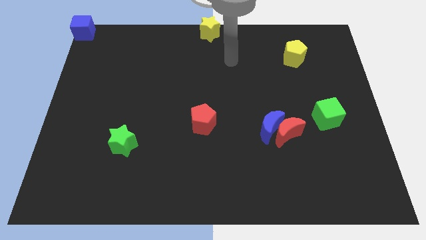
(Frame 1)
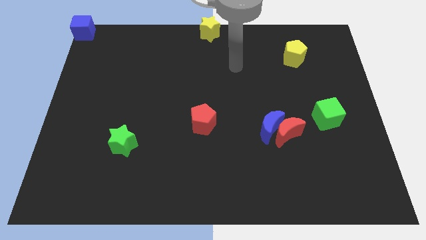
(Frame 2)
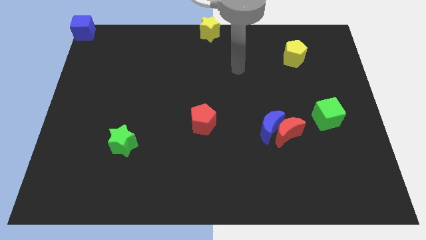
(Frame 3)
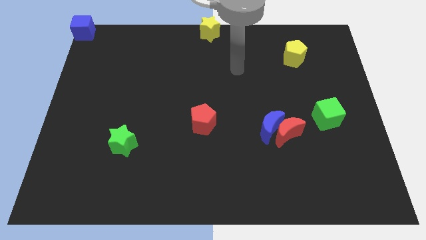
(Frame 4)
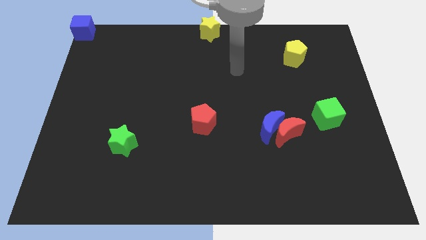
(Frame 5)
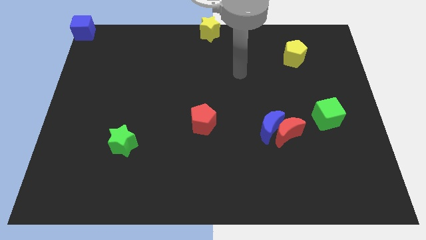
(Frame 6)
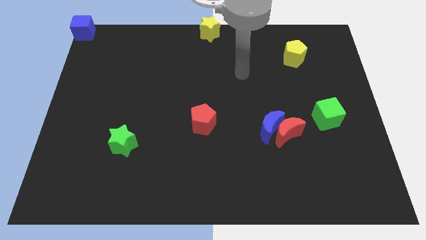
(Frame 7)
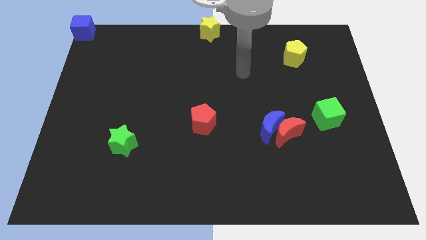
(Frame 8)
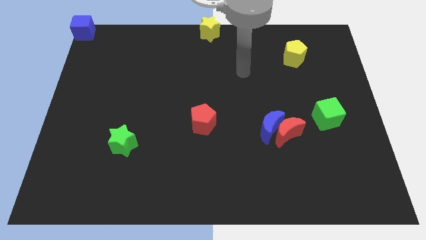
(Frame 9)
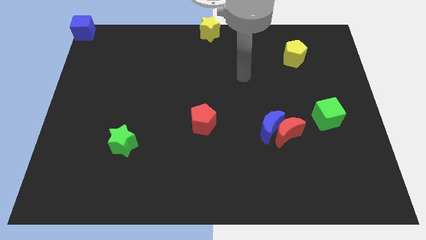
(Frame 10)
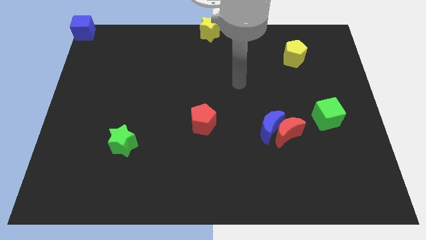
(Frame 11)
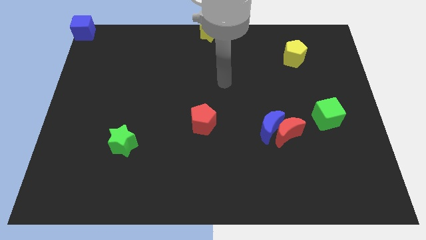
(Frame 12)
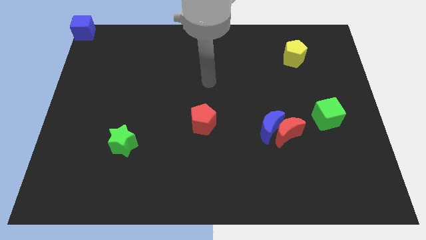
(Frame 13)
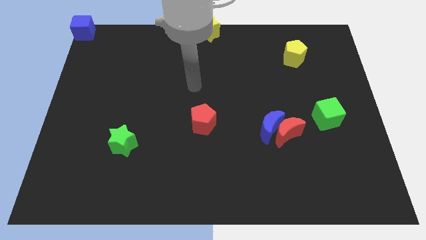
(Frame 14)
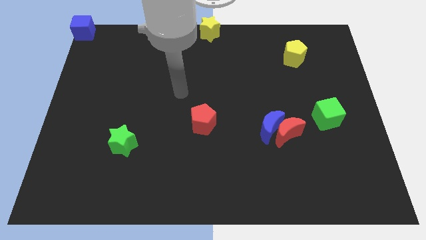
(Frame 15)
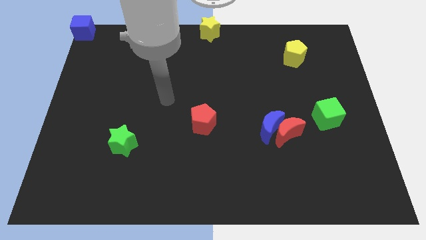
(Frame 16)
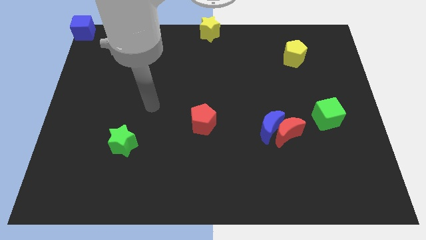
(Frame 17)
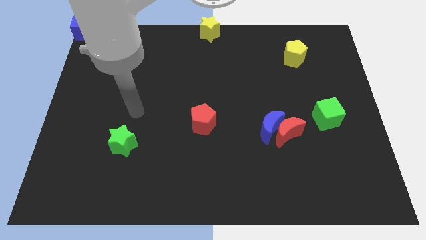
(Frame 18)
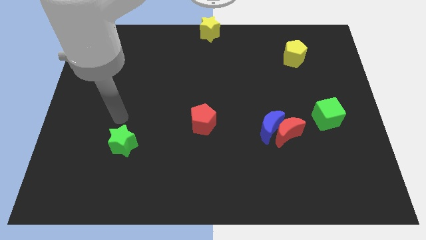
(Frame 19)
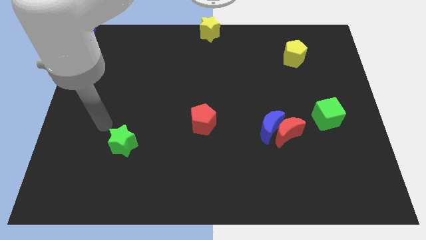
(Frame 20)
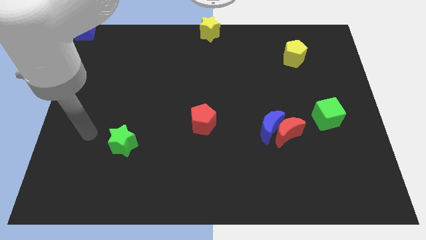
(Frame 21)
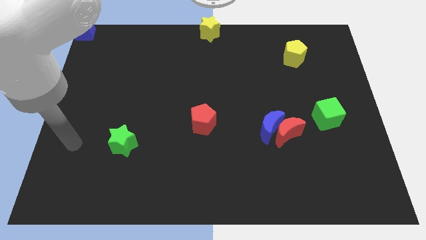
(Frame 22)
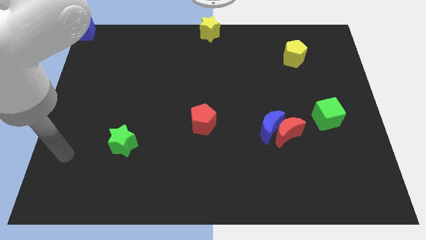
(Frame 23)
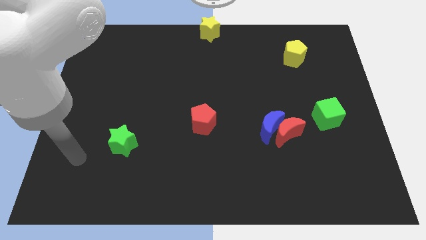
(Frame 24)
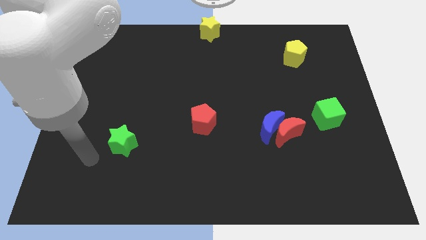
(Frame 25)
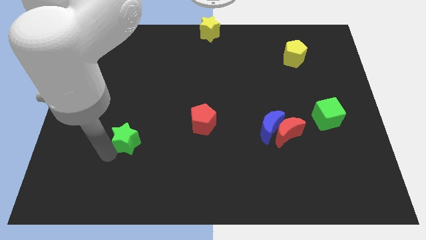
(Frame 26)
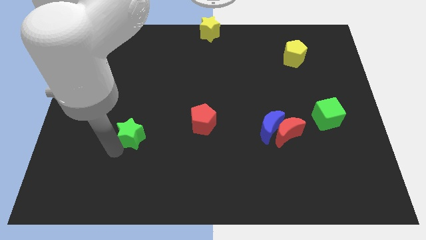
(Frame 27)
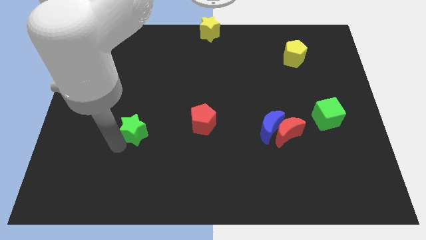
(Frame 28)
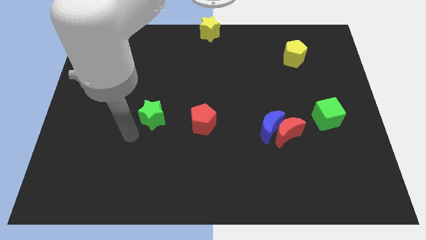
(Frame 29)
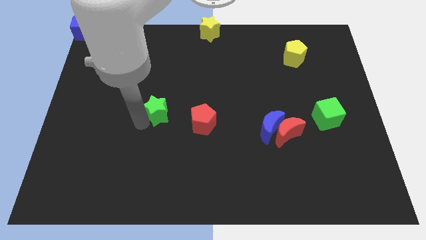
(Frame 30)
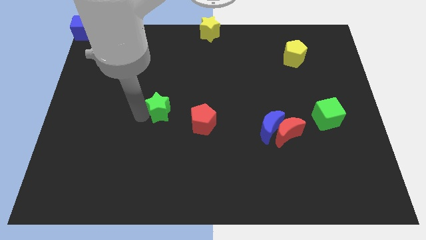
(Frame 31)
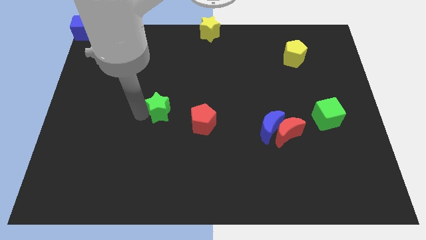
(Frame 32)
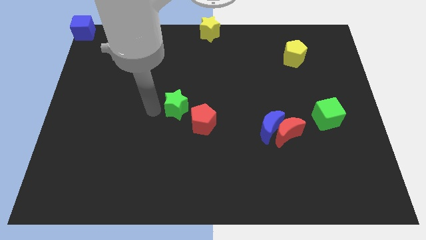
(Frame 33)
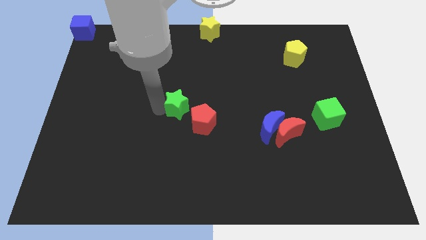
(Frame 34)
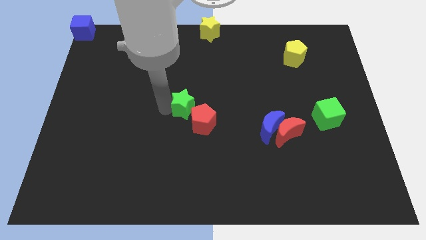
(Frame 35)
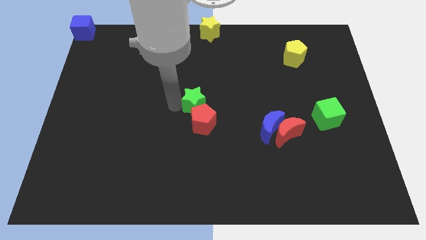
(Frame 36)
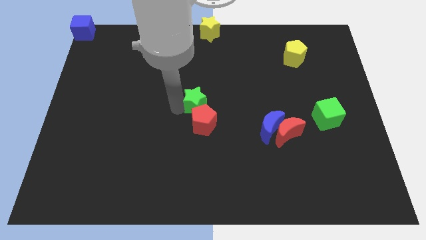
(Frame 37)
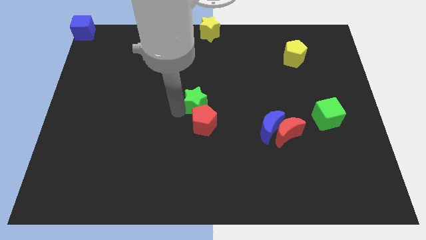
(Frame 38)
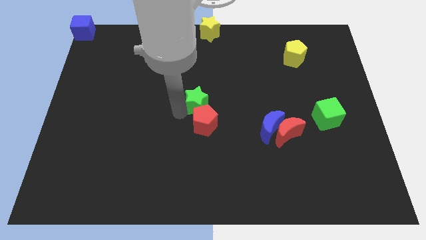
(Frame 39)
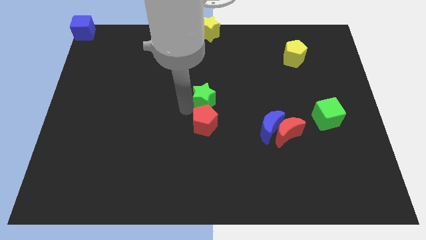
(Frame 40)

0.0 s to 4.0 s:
place green star top of red pentagon

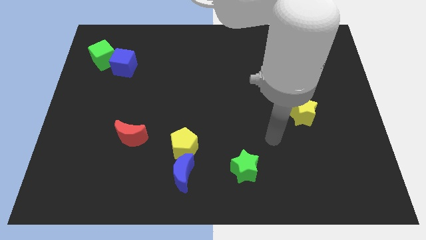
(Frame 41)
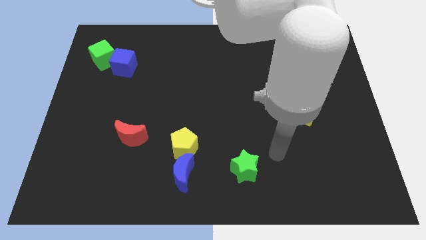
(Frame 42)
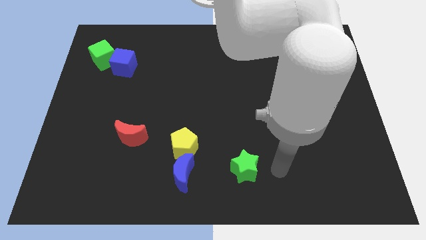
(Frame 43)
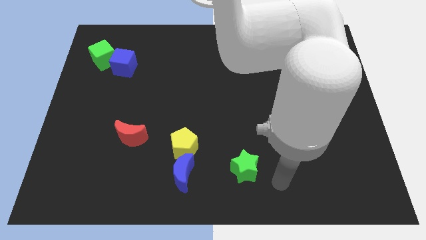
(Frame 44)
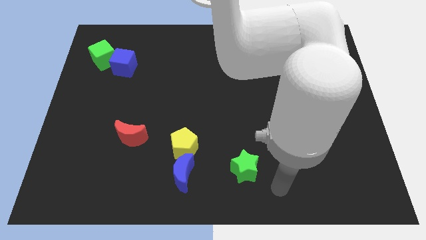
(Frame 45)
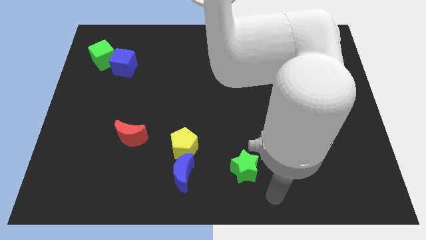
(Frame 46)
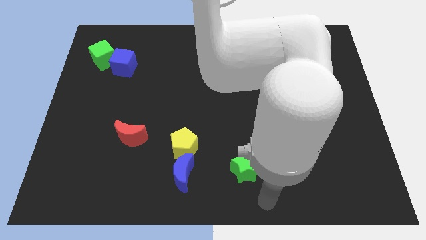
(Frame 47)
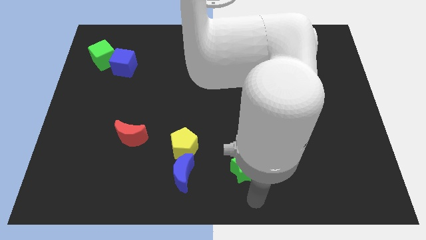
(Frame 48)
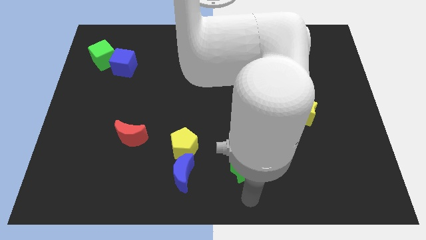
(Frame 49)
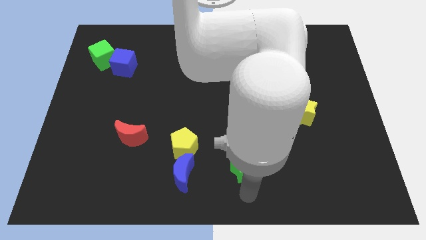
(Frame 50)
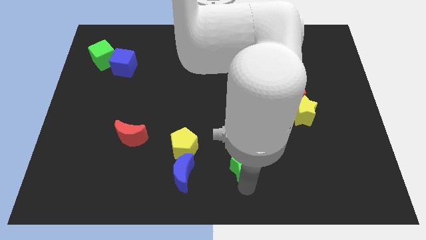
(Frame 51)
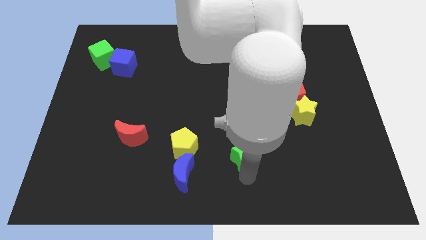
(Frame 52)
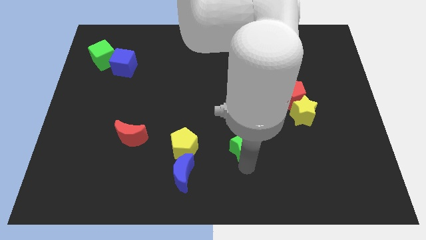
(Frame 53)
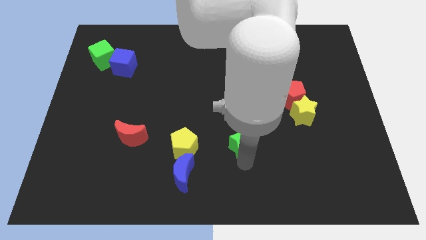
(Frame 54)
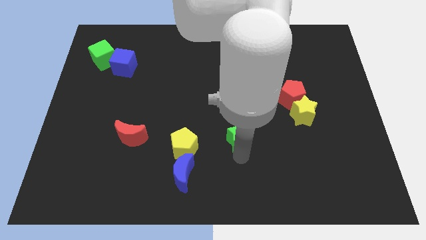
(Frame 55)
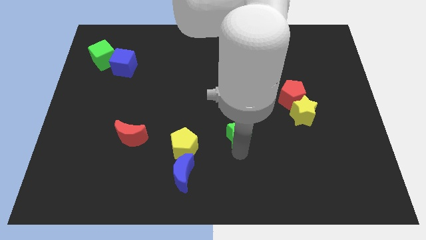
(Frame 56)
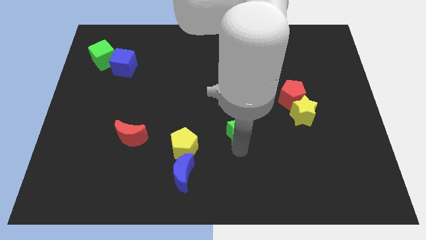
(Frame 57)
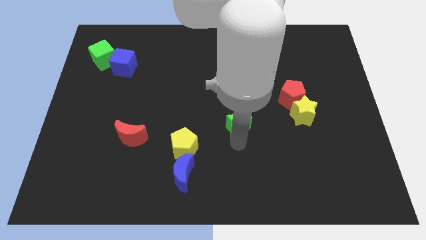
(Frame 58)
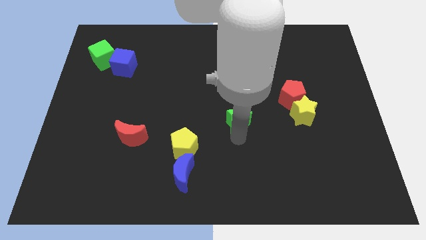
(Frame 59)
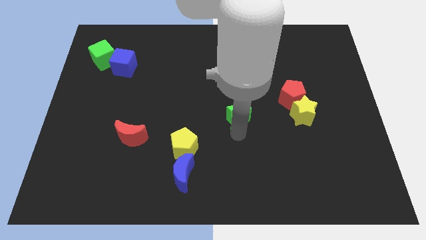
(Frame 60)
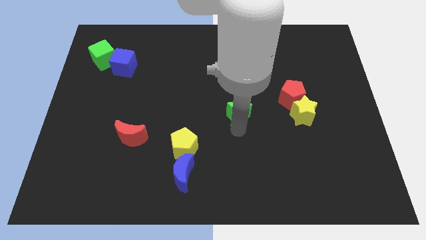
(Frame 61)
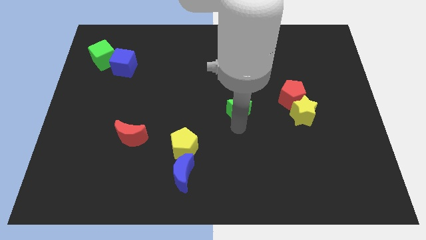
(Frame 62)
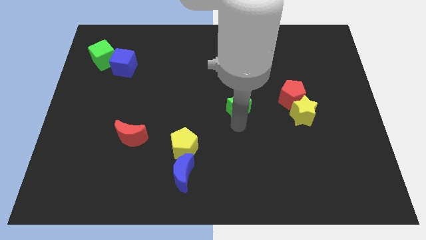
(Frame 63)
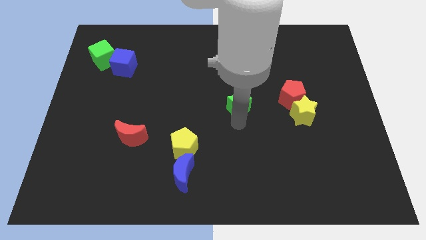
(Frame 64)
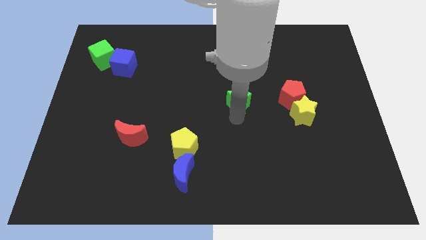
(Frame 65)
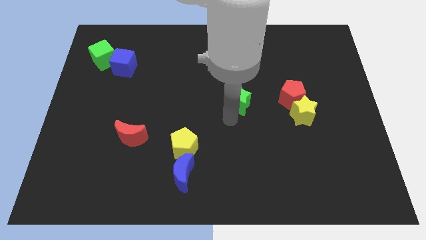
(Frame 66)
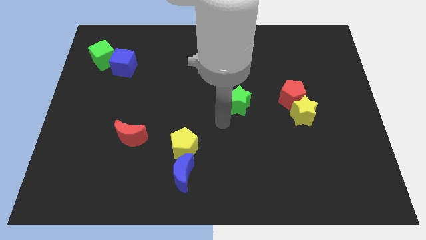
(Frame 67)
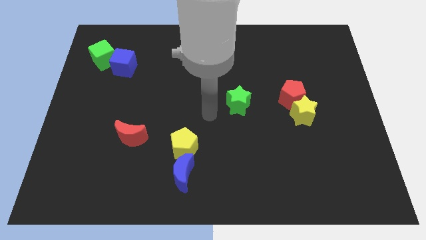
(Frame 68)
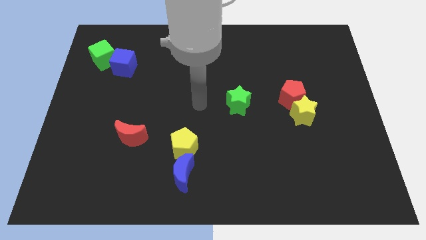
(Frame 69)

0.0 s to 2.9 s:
push the green star towards the center of the board

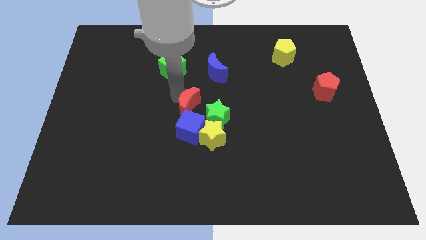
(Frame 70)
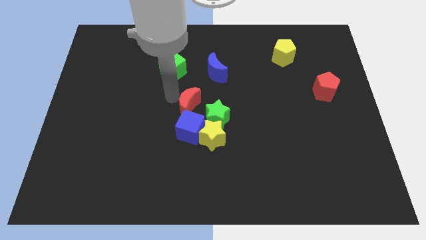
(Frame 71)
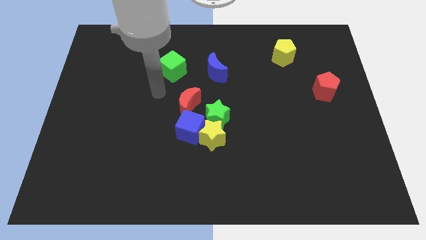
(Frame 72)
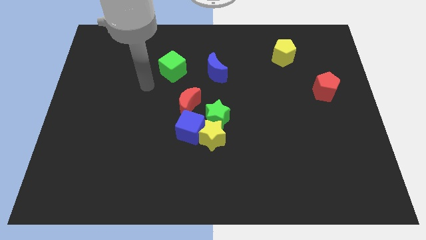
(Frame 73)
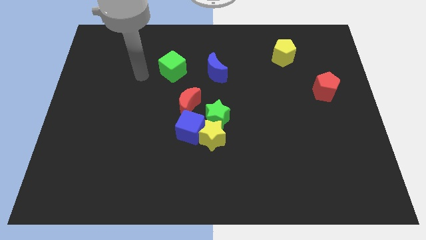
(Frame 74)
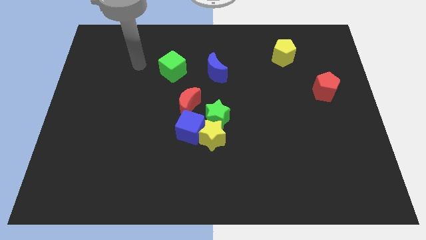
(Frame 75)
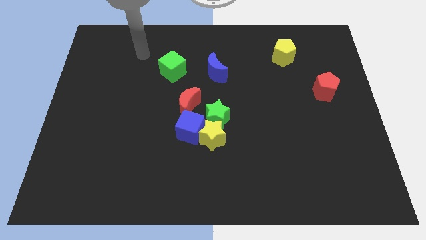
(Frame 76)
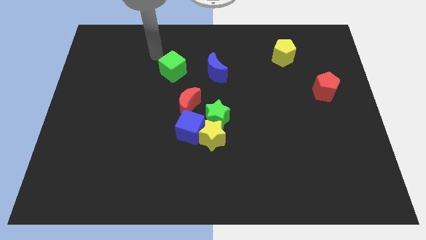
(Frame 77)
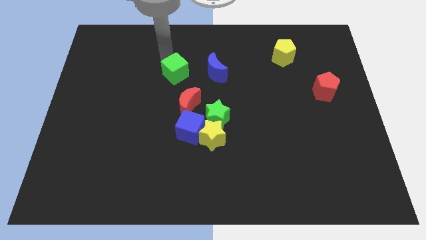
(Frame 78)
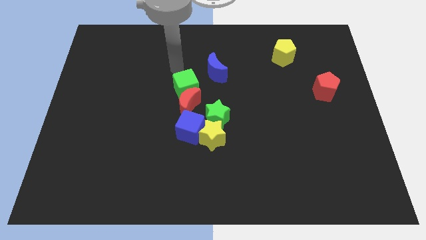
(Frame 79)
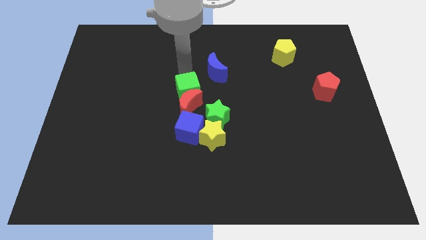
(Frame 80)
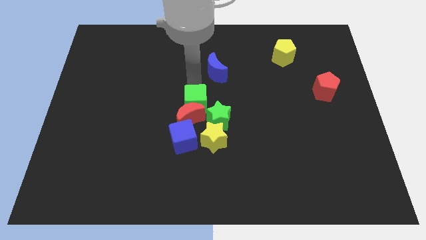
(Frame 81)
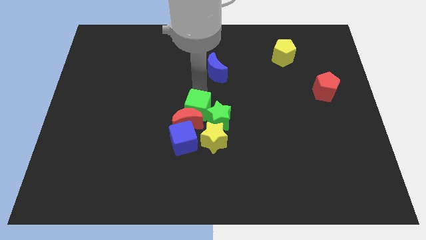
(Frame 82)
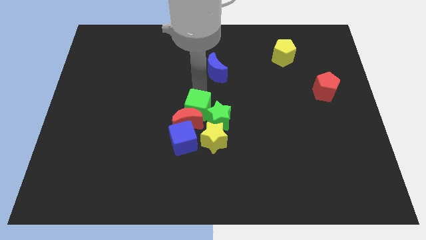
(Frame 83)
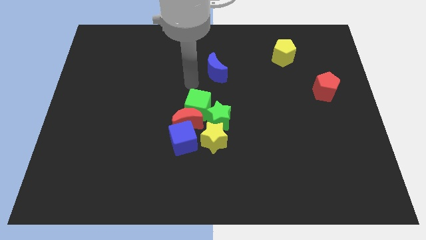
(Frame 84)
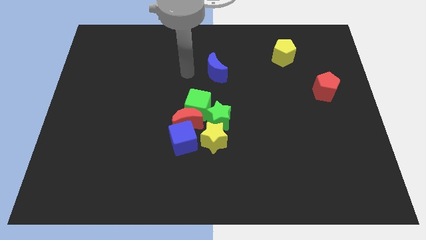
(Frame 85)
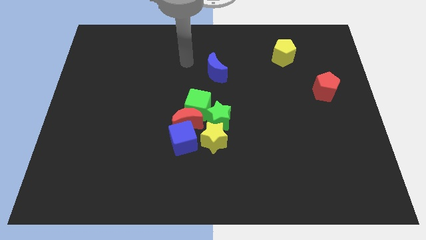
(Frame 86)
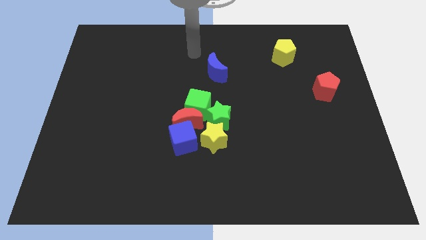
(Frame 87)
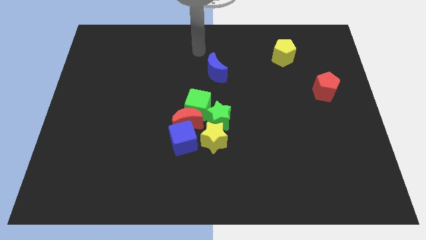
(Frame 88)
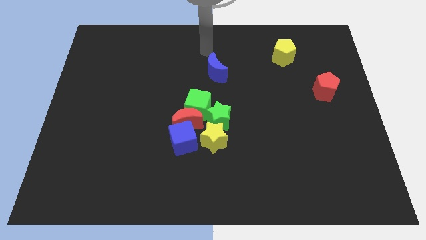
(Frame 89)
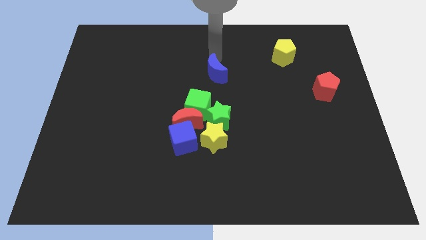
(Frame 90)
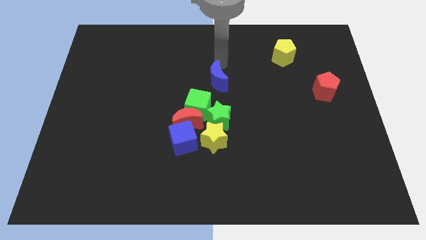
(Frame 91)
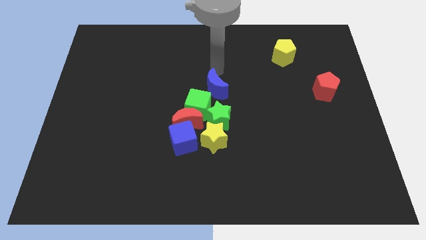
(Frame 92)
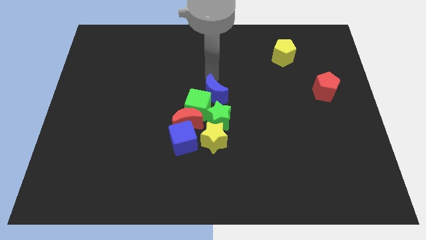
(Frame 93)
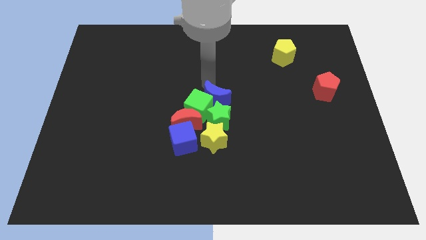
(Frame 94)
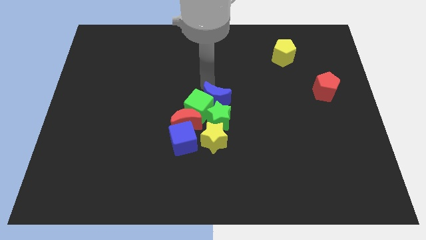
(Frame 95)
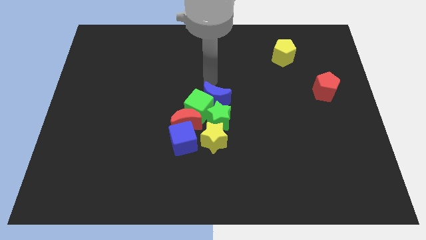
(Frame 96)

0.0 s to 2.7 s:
push blue crescent into the group of blocks to the center
